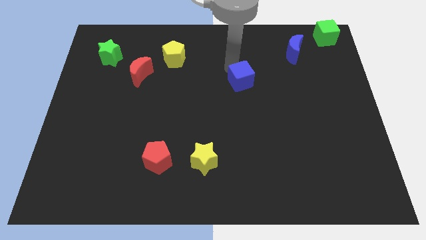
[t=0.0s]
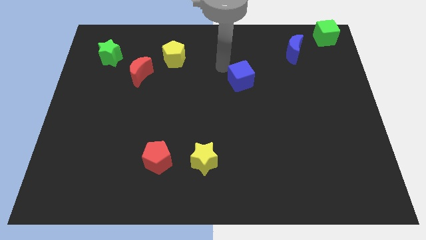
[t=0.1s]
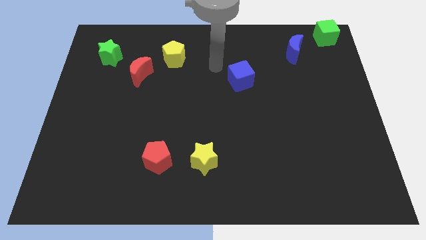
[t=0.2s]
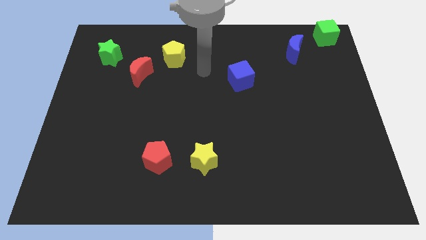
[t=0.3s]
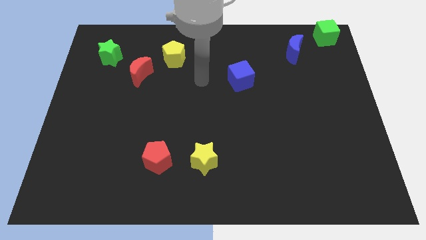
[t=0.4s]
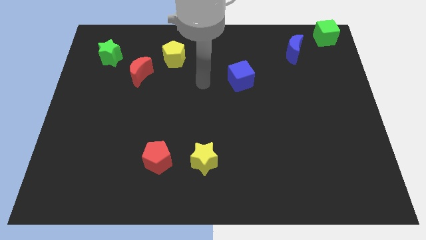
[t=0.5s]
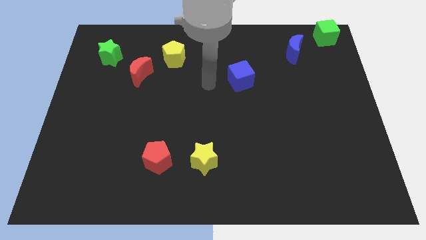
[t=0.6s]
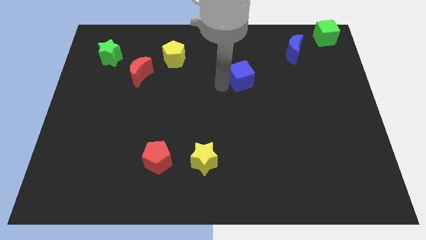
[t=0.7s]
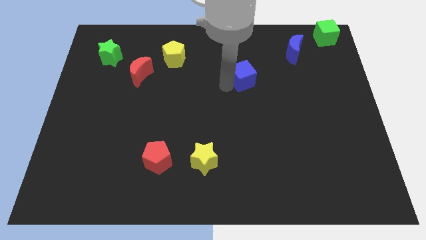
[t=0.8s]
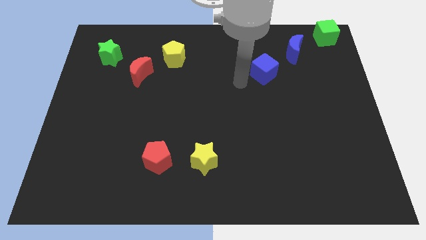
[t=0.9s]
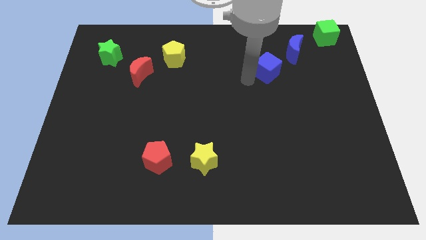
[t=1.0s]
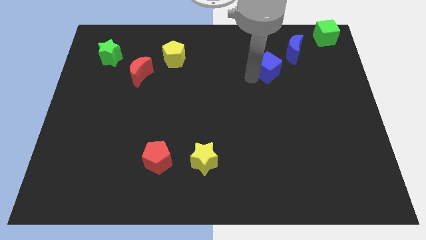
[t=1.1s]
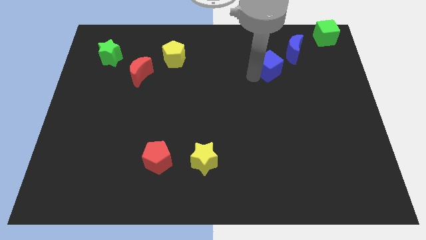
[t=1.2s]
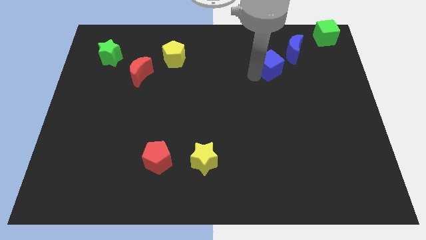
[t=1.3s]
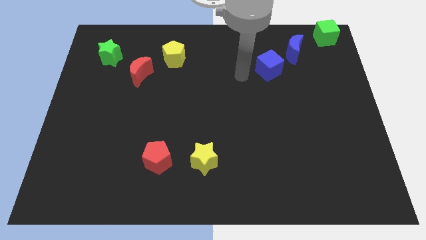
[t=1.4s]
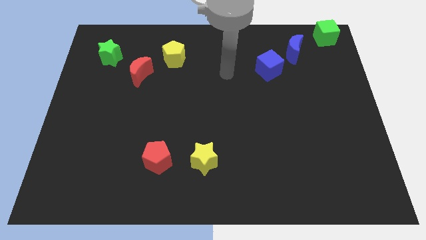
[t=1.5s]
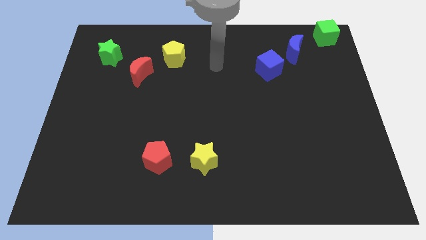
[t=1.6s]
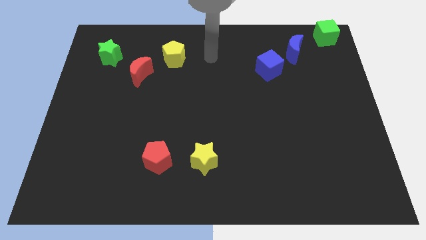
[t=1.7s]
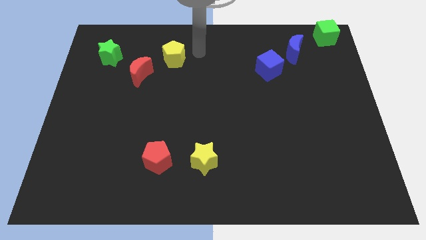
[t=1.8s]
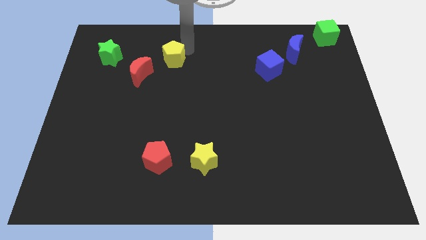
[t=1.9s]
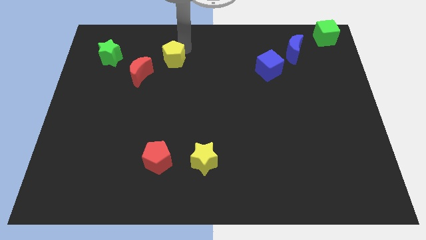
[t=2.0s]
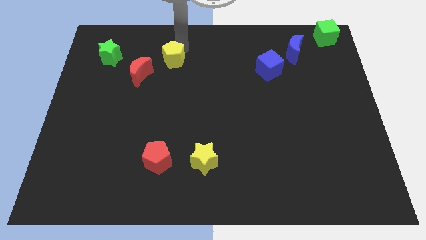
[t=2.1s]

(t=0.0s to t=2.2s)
push blue cube towards the blue moon

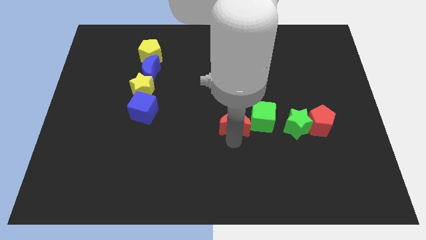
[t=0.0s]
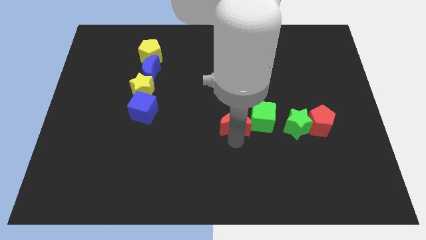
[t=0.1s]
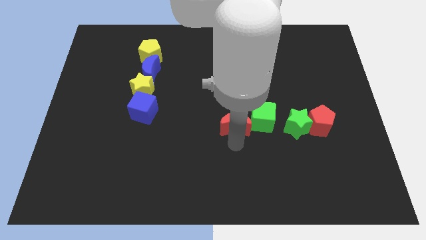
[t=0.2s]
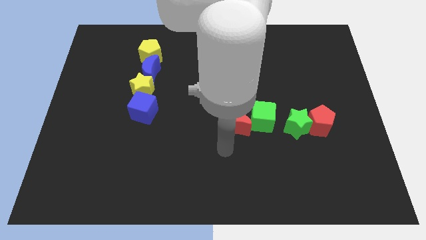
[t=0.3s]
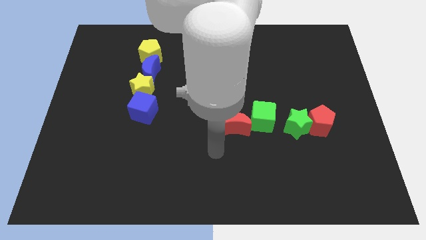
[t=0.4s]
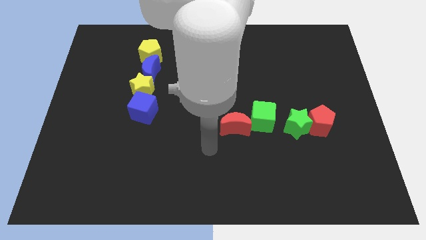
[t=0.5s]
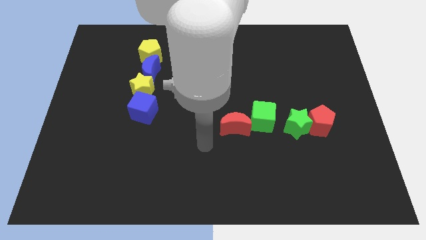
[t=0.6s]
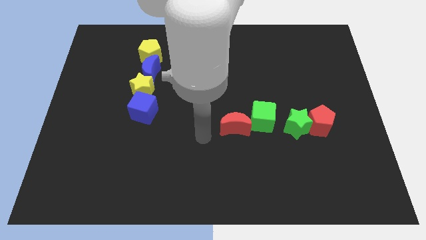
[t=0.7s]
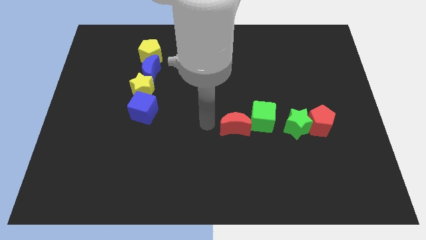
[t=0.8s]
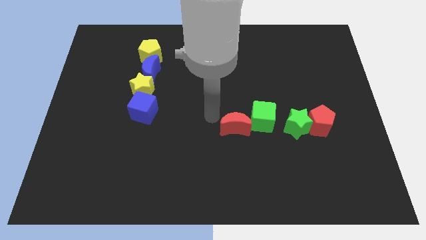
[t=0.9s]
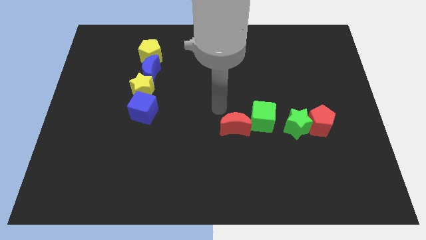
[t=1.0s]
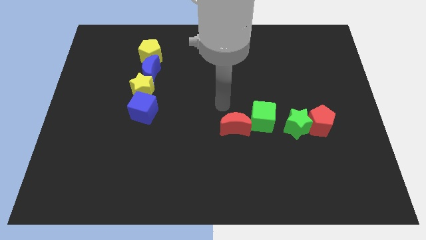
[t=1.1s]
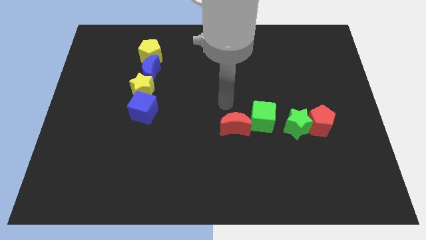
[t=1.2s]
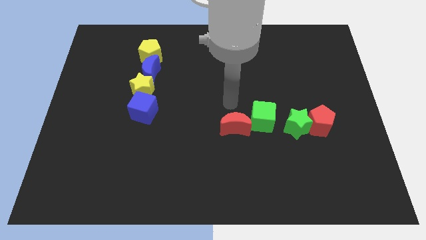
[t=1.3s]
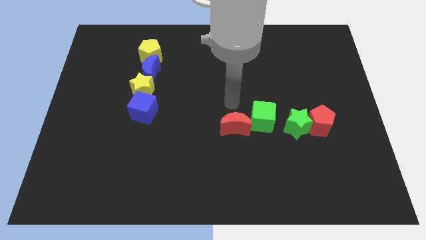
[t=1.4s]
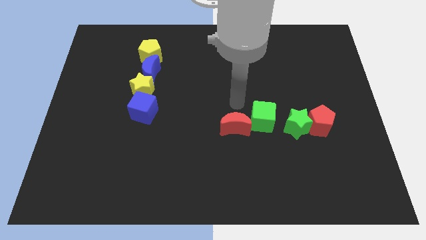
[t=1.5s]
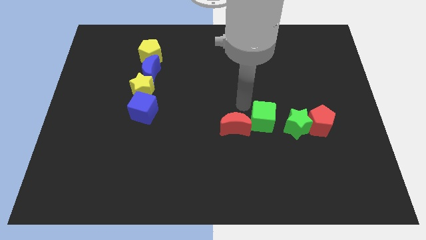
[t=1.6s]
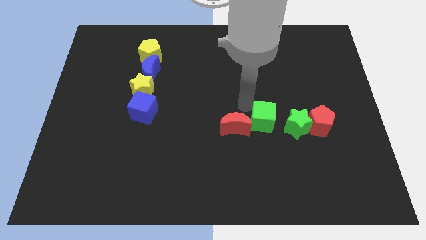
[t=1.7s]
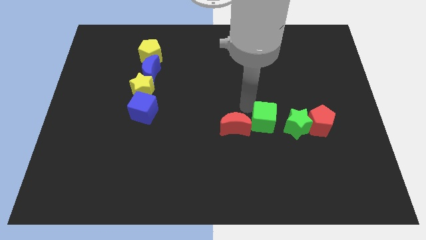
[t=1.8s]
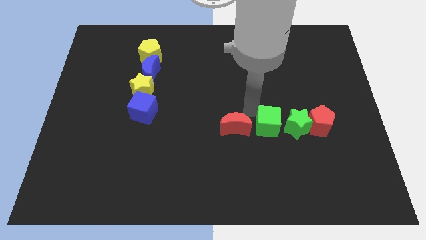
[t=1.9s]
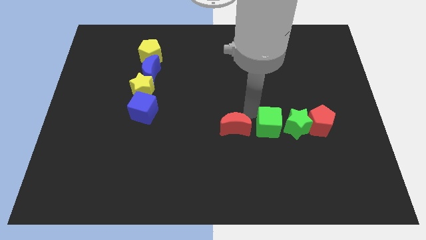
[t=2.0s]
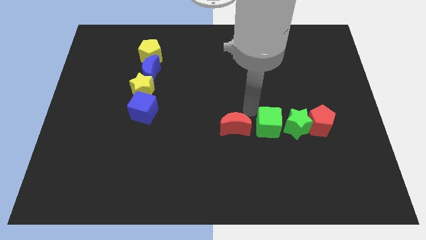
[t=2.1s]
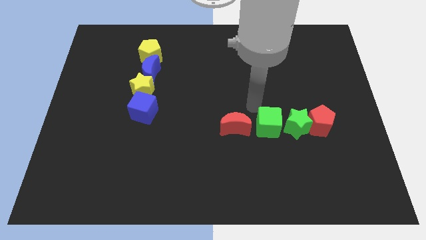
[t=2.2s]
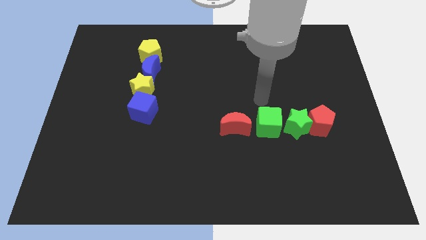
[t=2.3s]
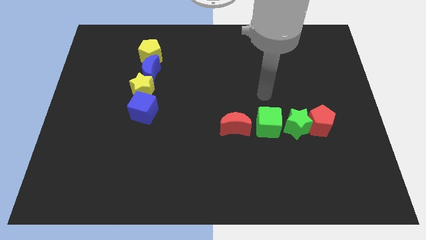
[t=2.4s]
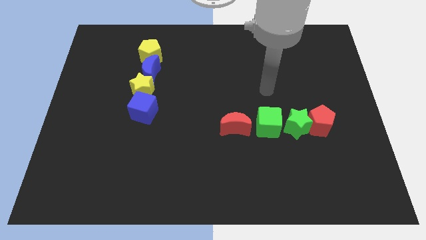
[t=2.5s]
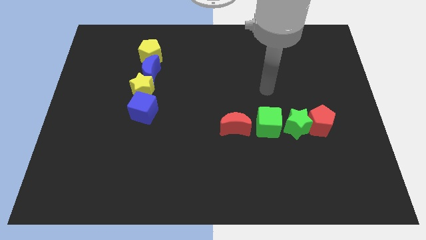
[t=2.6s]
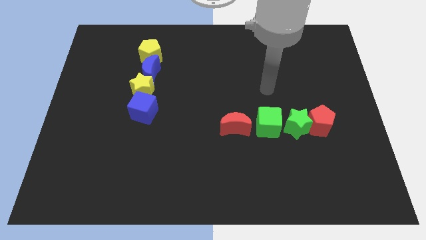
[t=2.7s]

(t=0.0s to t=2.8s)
place the green cube in between the red moon and green star

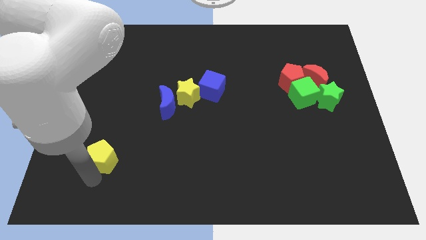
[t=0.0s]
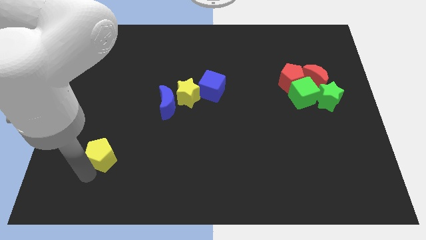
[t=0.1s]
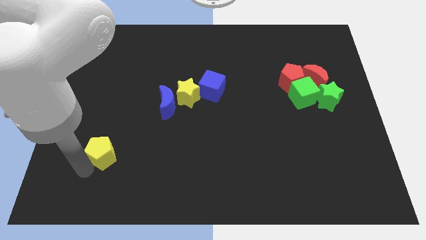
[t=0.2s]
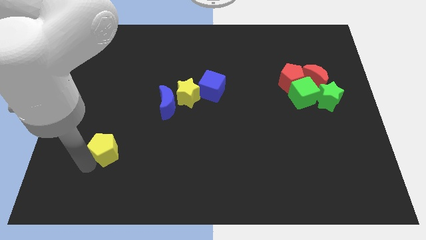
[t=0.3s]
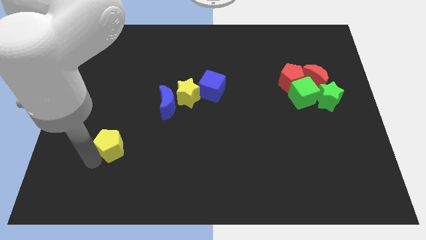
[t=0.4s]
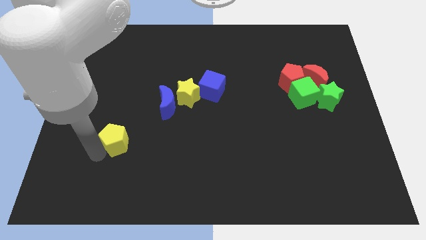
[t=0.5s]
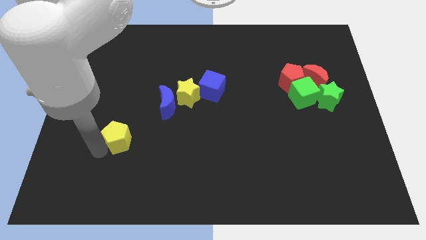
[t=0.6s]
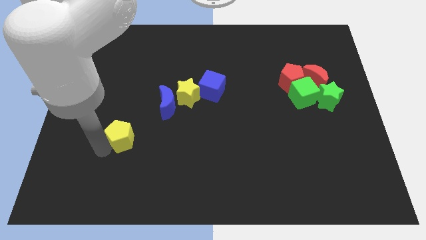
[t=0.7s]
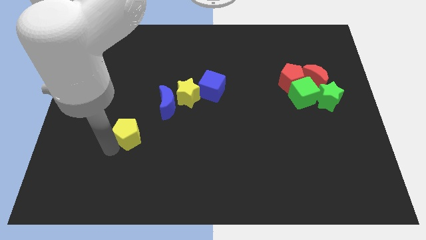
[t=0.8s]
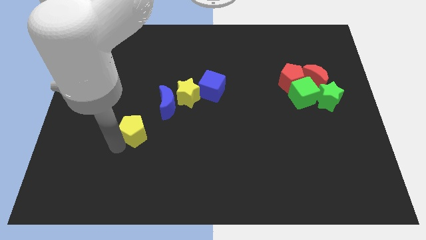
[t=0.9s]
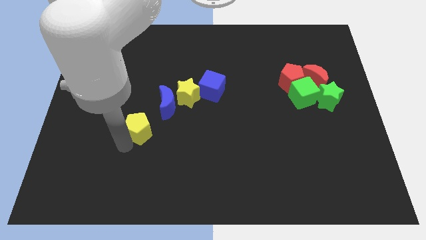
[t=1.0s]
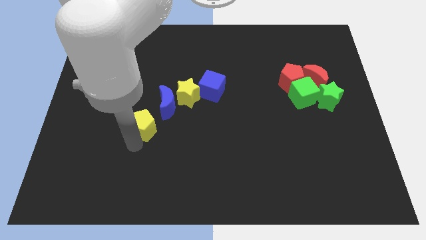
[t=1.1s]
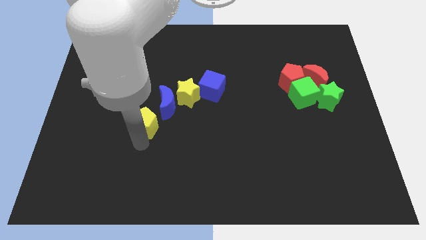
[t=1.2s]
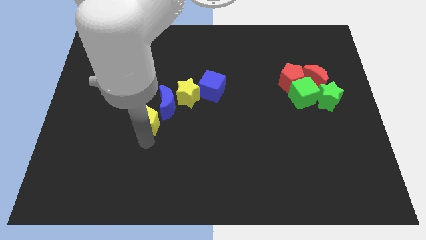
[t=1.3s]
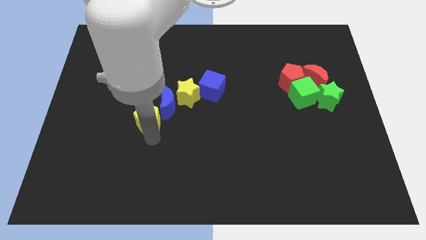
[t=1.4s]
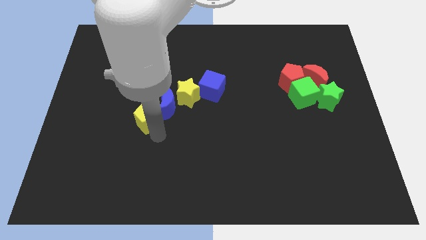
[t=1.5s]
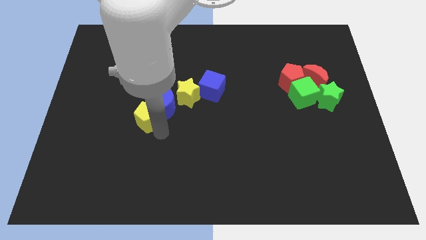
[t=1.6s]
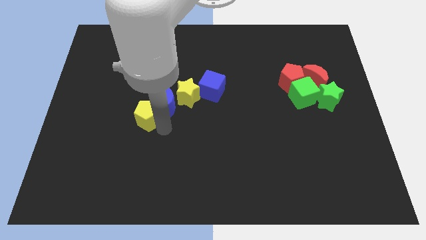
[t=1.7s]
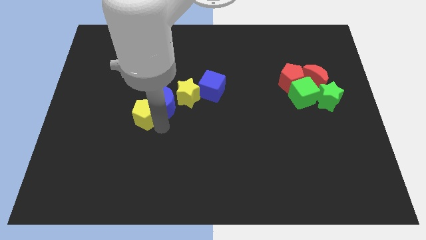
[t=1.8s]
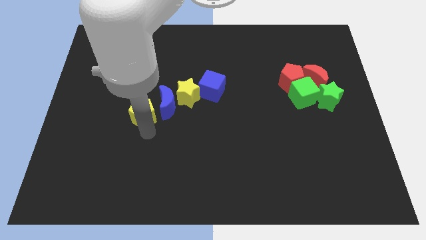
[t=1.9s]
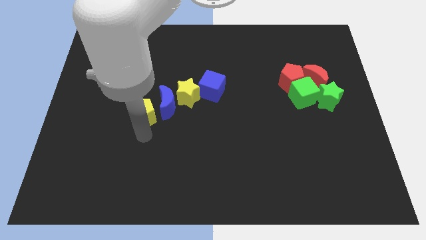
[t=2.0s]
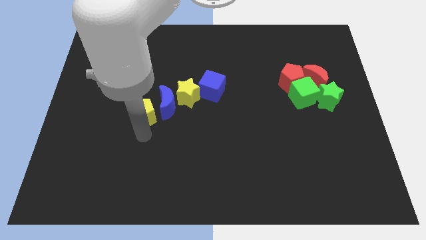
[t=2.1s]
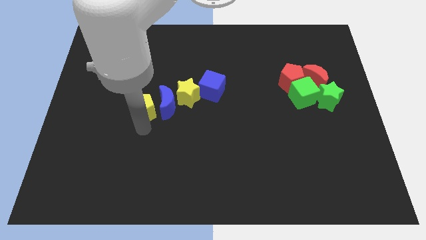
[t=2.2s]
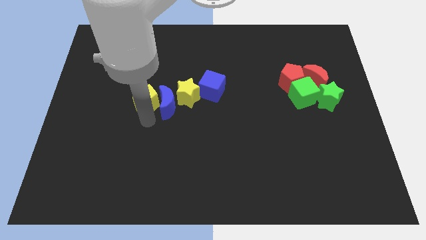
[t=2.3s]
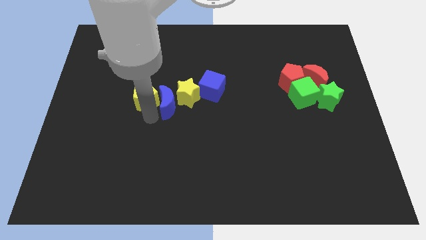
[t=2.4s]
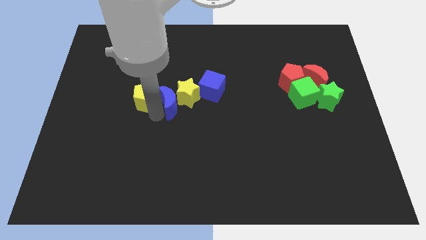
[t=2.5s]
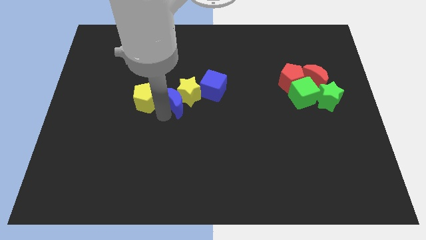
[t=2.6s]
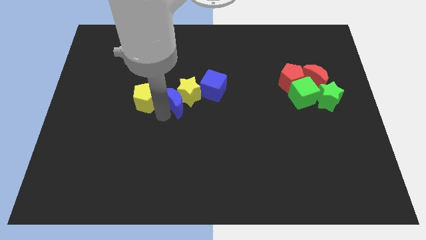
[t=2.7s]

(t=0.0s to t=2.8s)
put the yellow pentagon to the left side of the blue crescent

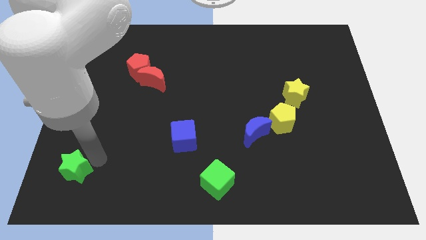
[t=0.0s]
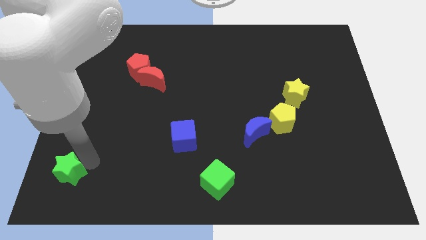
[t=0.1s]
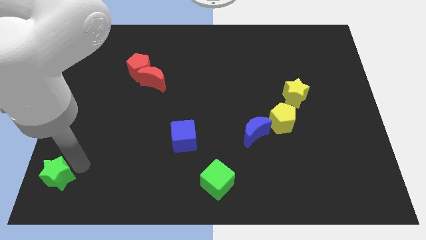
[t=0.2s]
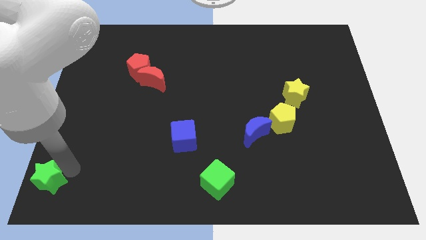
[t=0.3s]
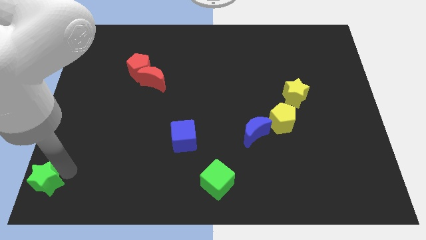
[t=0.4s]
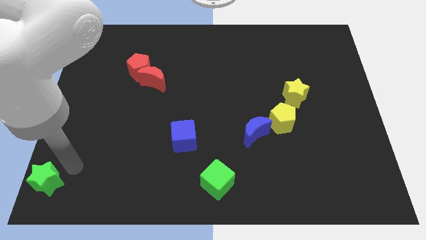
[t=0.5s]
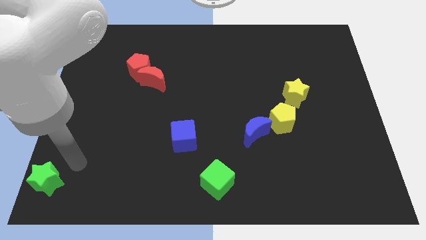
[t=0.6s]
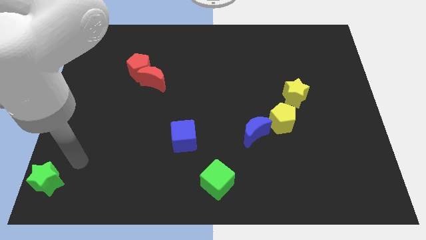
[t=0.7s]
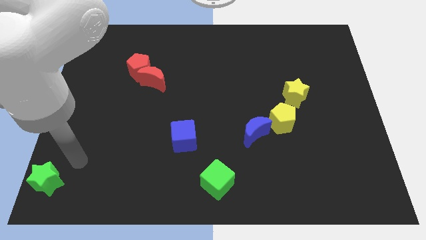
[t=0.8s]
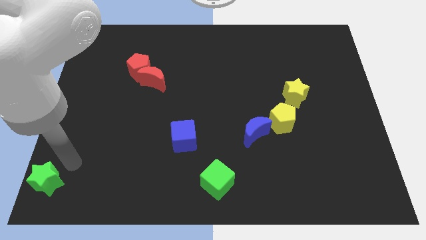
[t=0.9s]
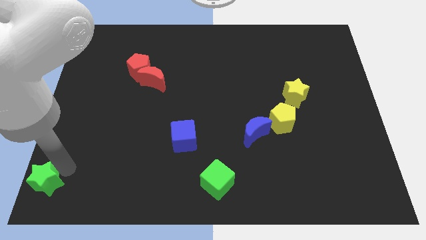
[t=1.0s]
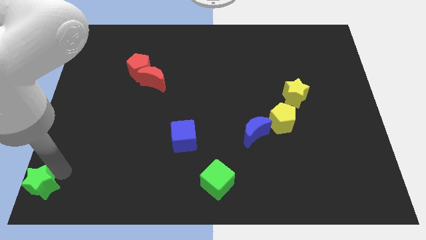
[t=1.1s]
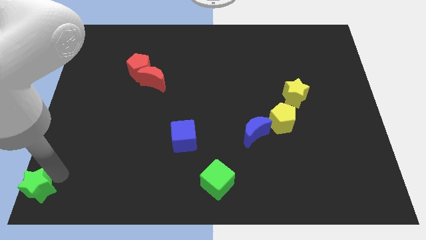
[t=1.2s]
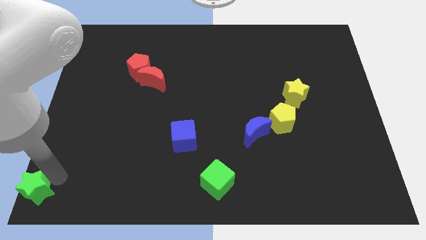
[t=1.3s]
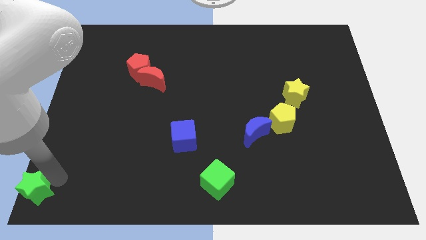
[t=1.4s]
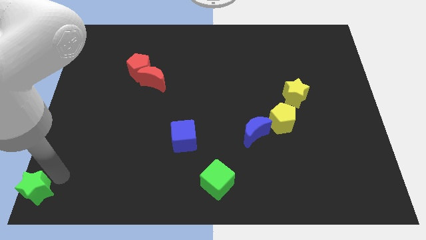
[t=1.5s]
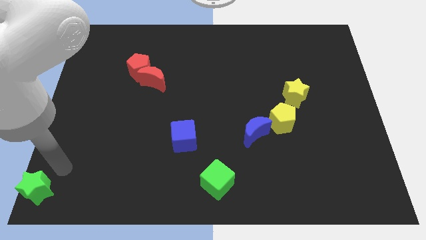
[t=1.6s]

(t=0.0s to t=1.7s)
place the green star towards the bottom left corner of the board
